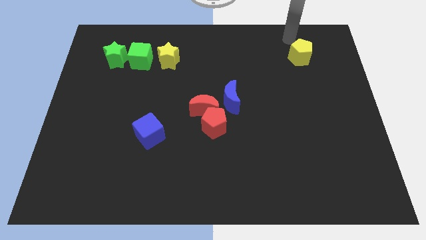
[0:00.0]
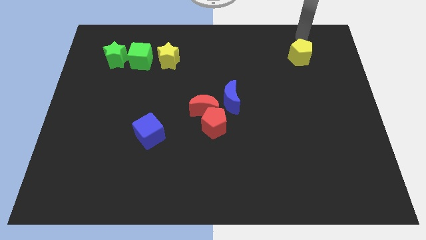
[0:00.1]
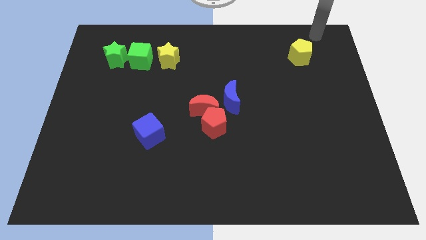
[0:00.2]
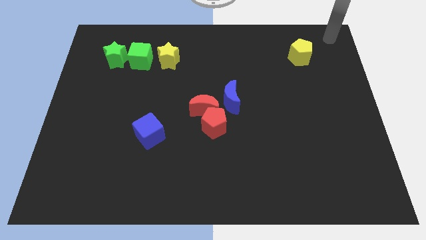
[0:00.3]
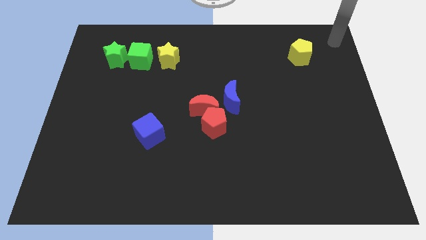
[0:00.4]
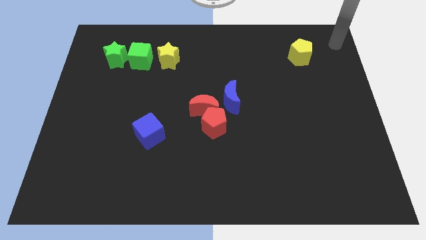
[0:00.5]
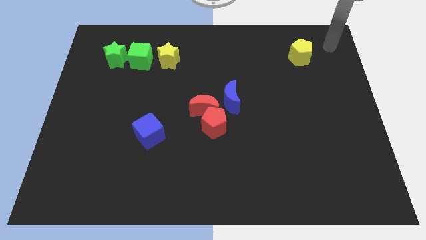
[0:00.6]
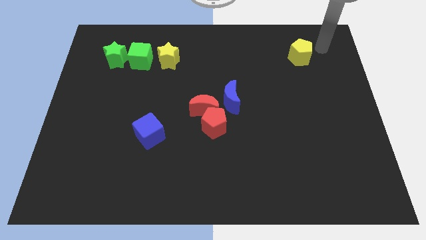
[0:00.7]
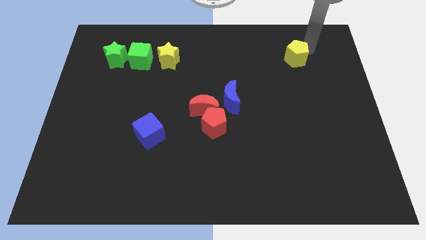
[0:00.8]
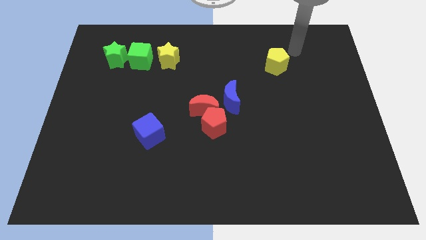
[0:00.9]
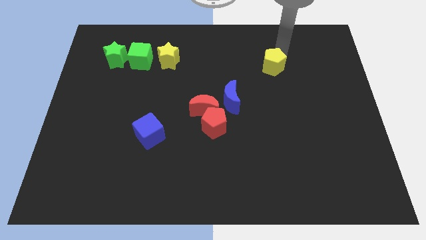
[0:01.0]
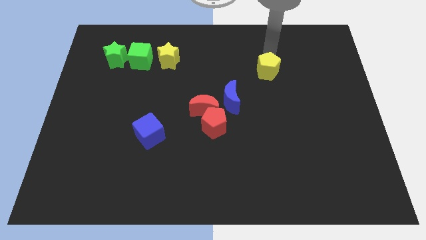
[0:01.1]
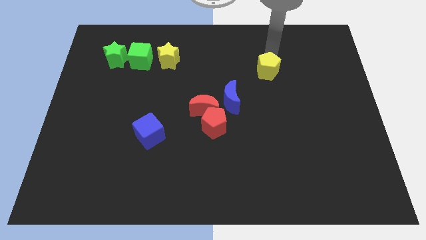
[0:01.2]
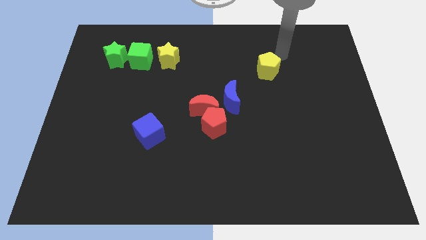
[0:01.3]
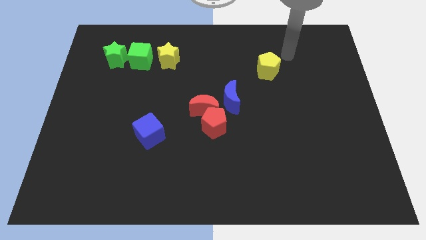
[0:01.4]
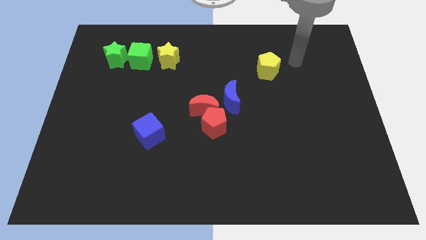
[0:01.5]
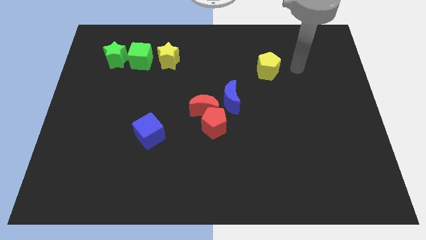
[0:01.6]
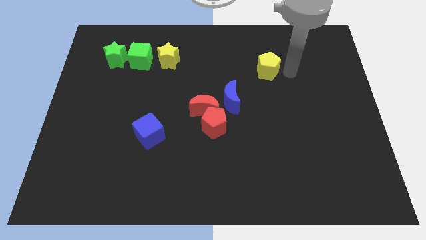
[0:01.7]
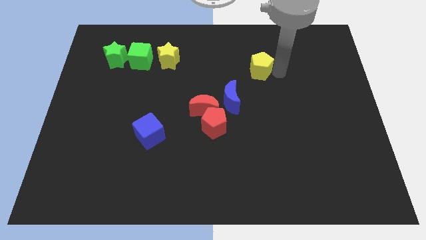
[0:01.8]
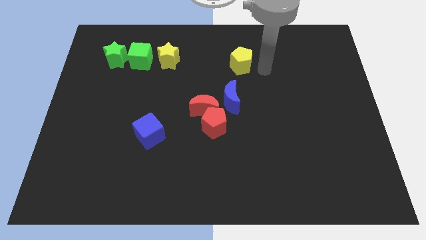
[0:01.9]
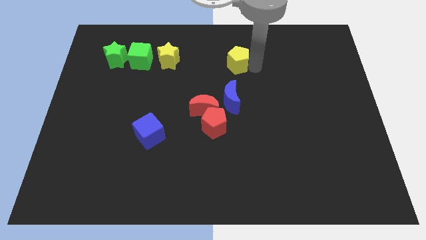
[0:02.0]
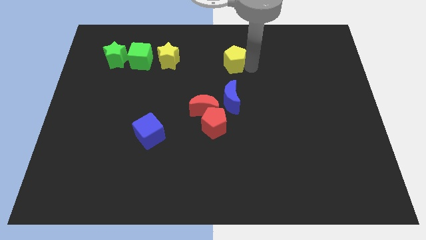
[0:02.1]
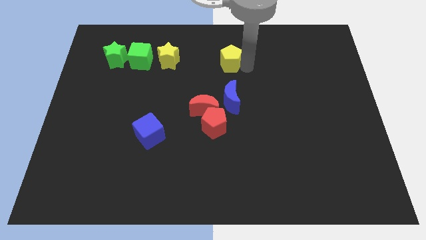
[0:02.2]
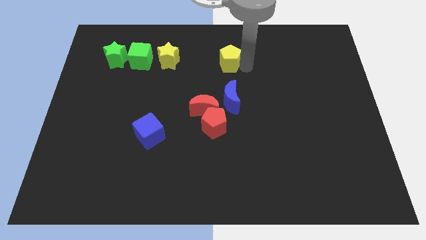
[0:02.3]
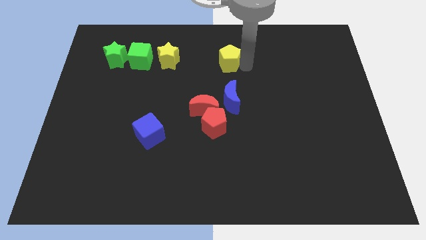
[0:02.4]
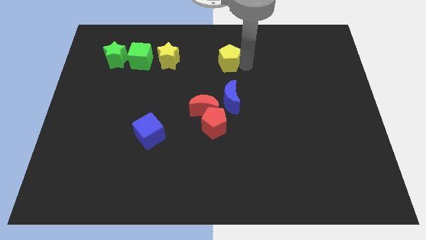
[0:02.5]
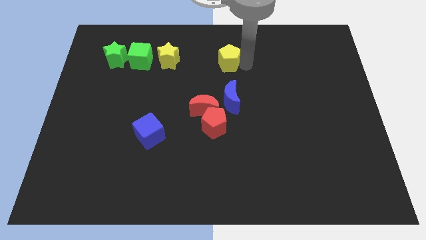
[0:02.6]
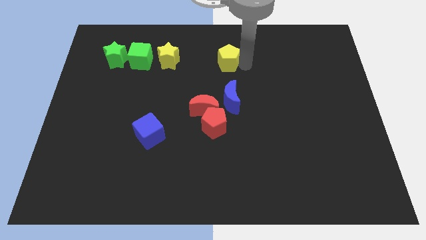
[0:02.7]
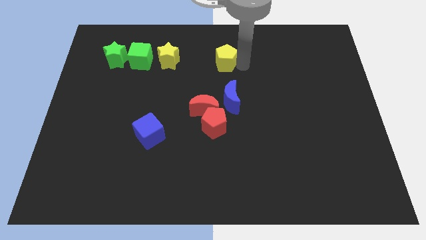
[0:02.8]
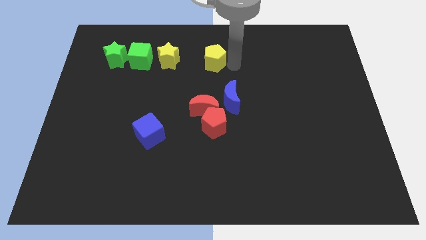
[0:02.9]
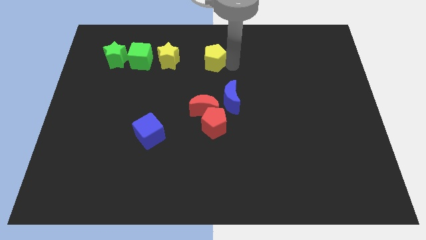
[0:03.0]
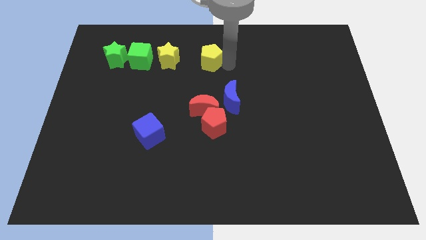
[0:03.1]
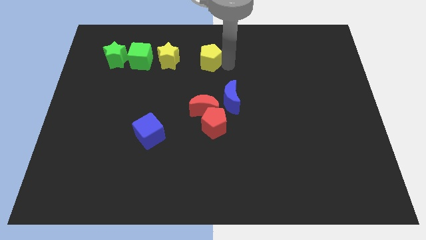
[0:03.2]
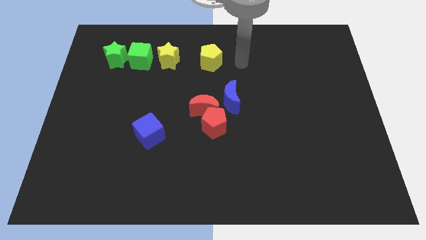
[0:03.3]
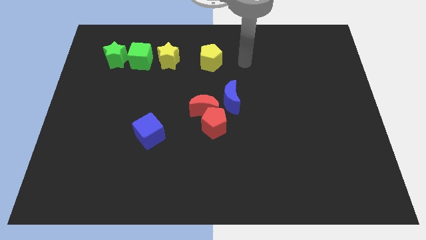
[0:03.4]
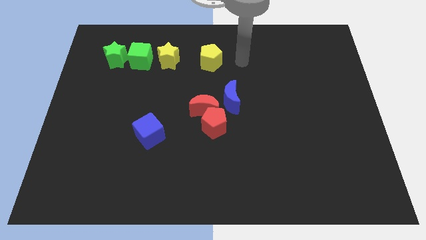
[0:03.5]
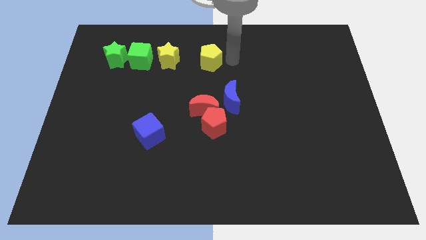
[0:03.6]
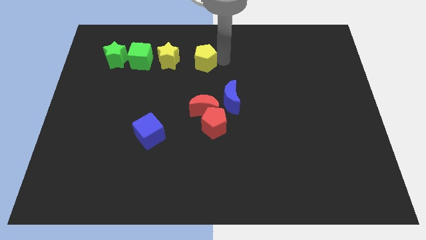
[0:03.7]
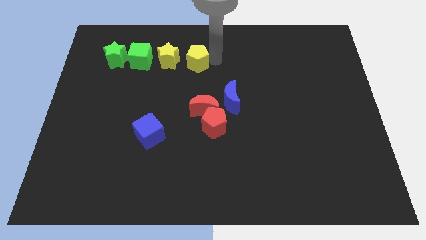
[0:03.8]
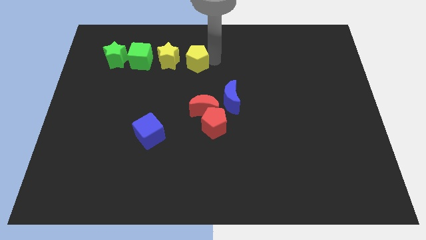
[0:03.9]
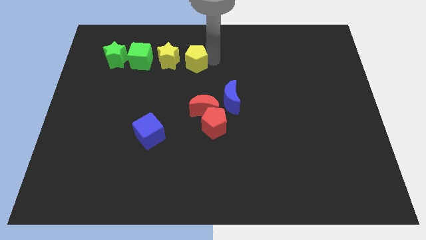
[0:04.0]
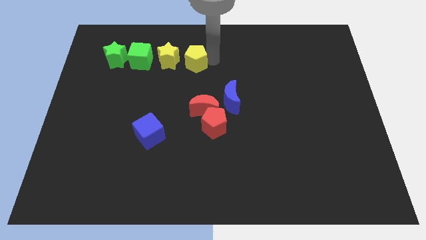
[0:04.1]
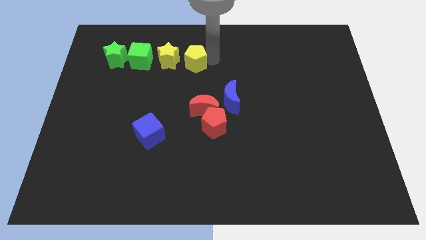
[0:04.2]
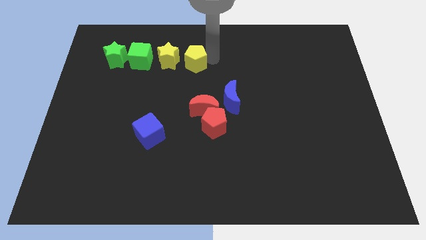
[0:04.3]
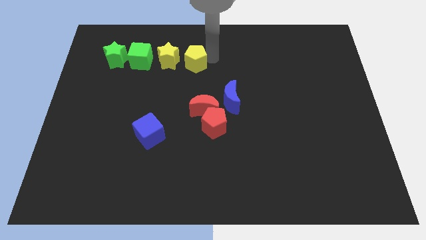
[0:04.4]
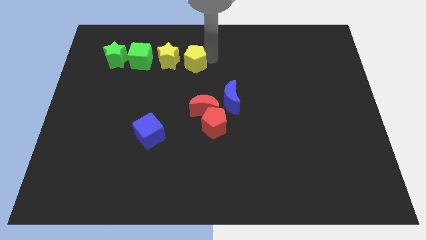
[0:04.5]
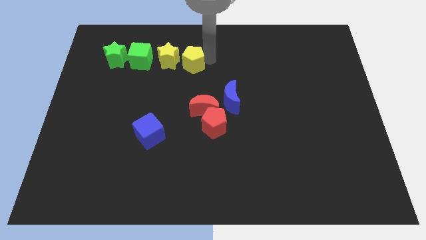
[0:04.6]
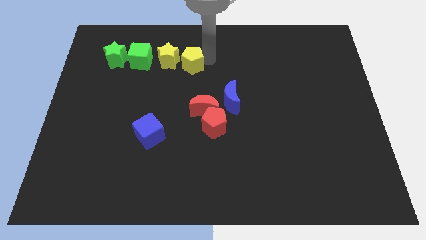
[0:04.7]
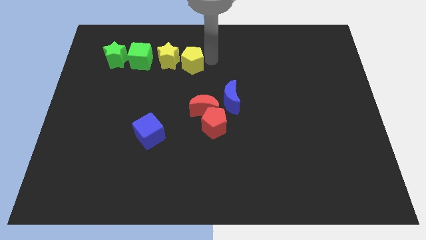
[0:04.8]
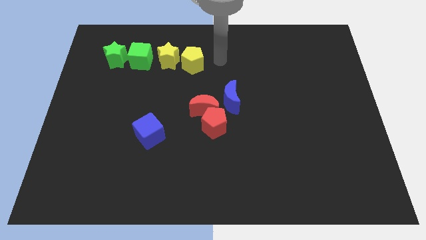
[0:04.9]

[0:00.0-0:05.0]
place the yellow pentagon right to the yellow star

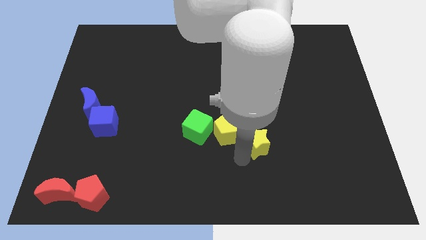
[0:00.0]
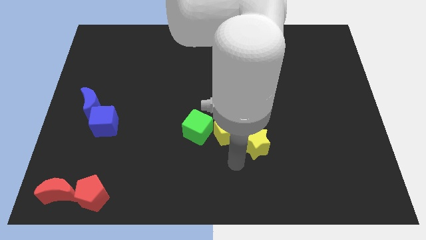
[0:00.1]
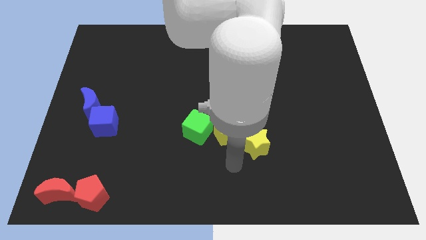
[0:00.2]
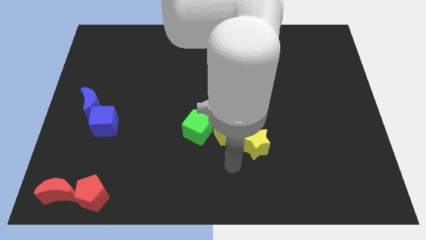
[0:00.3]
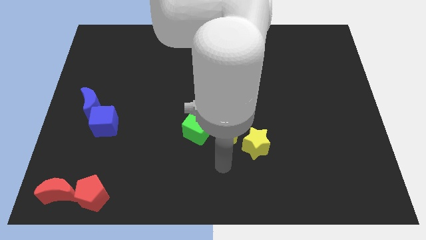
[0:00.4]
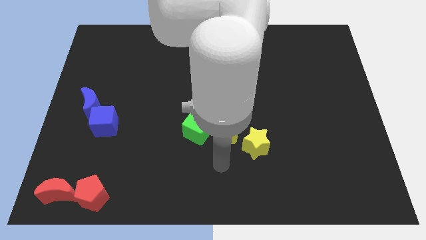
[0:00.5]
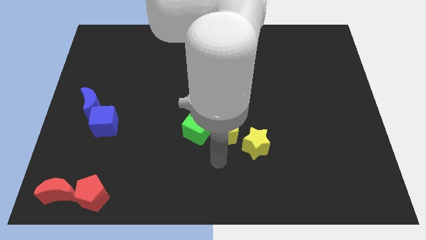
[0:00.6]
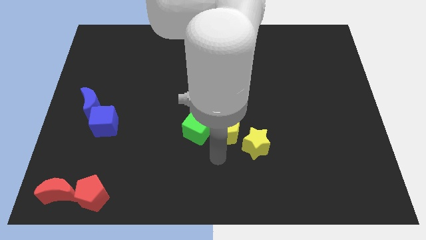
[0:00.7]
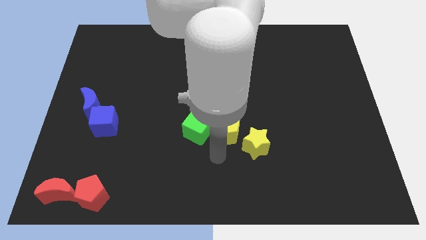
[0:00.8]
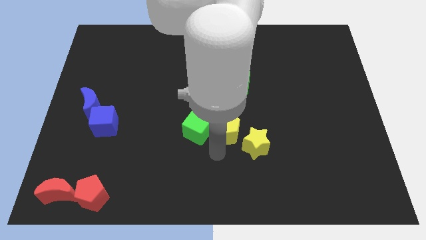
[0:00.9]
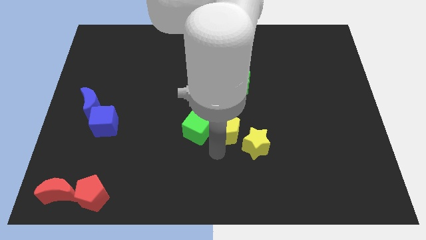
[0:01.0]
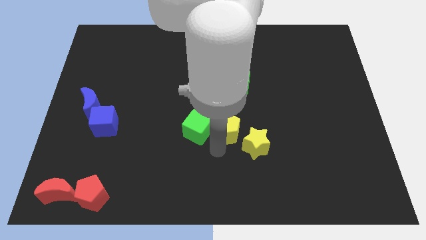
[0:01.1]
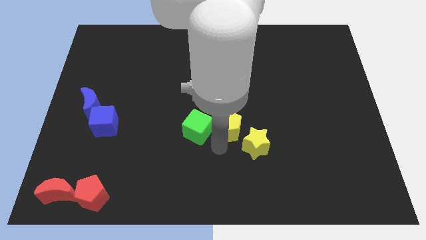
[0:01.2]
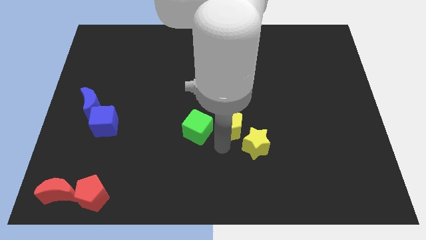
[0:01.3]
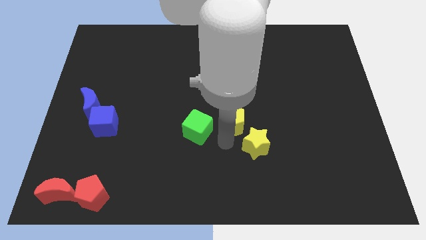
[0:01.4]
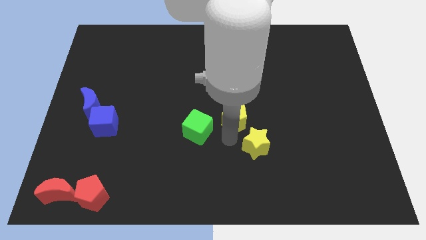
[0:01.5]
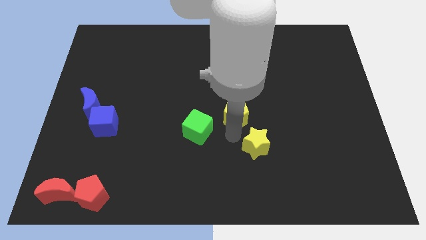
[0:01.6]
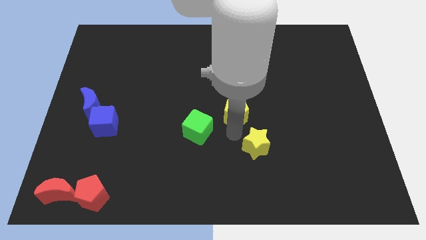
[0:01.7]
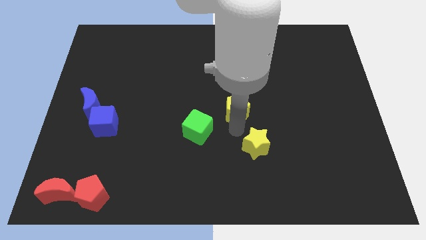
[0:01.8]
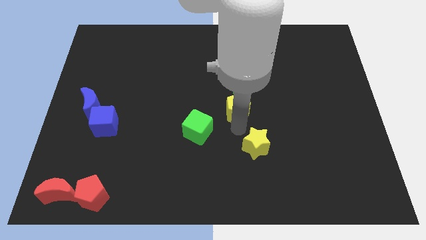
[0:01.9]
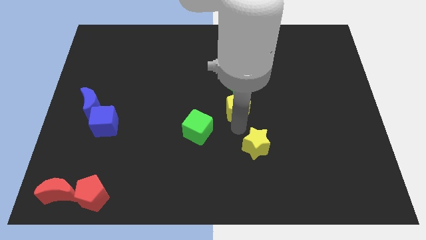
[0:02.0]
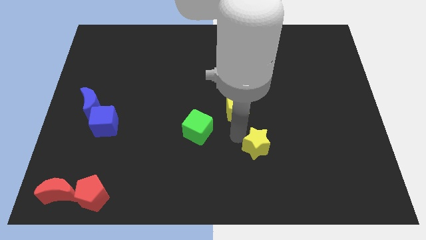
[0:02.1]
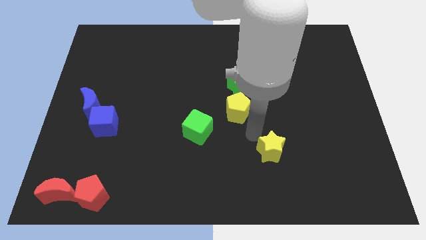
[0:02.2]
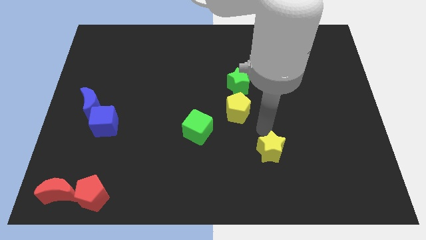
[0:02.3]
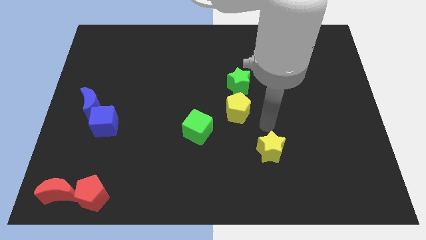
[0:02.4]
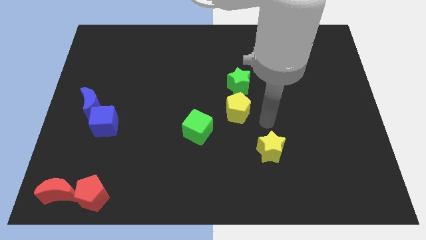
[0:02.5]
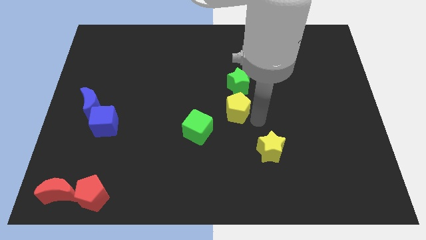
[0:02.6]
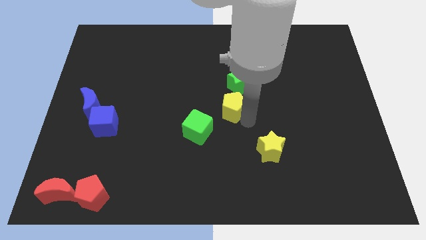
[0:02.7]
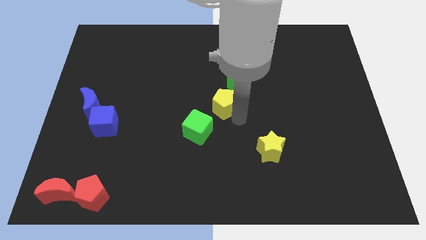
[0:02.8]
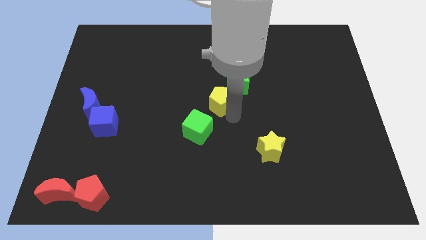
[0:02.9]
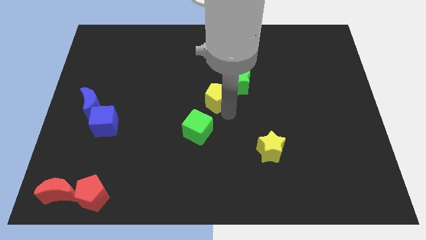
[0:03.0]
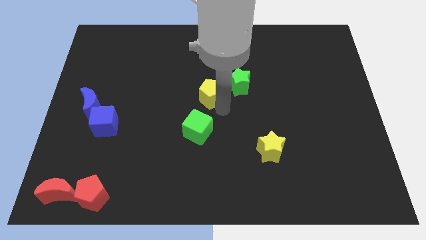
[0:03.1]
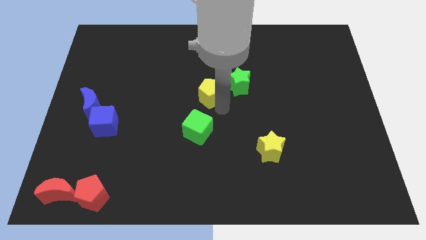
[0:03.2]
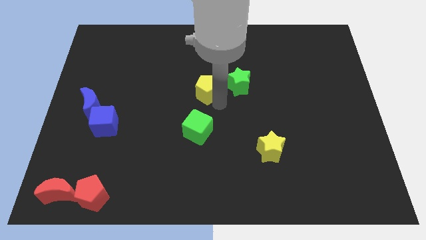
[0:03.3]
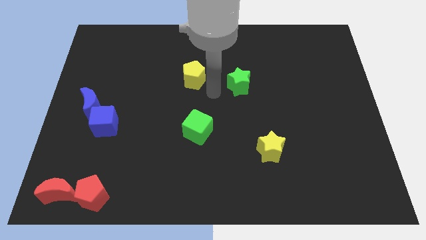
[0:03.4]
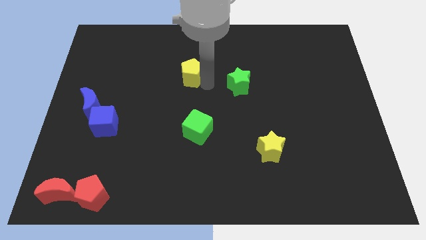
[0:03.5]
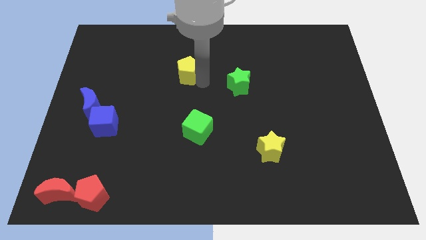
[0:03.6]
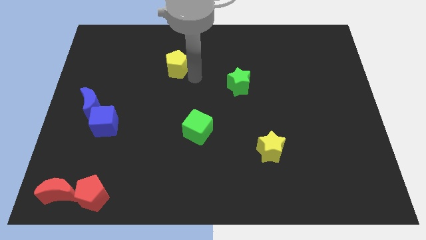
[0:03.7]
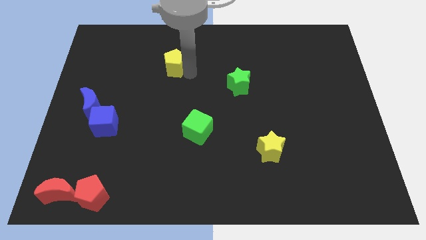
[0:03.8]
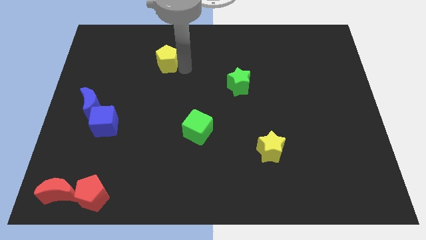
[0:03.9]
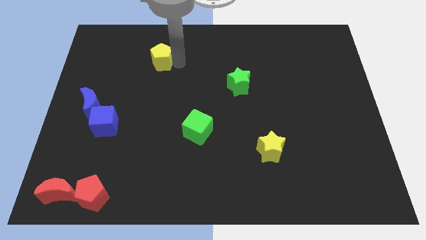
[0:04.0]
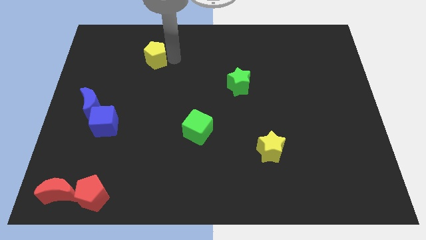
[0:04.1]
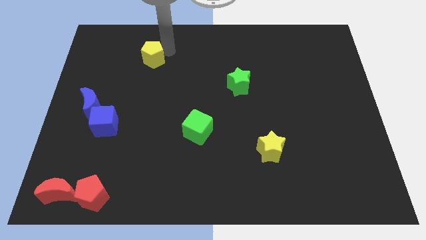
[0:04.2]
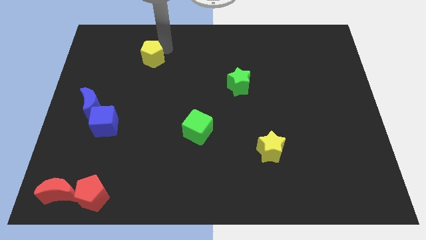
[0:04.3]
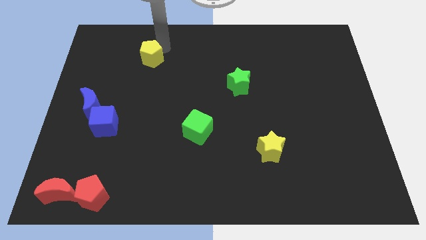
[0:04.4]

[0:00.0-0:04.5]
move the yellow pentagon to the top left side of the board
